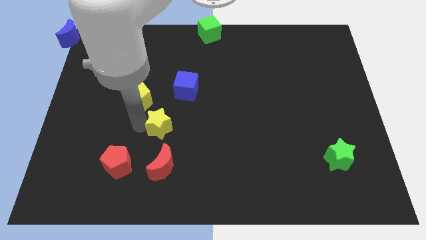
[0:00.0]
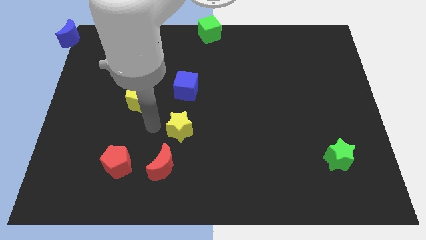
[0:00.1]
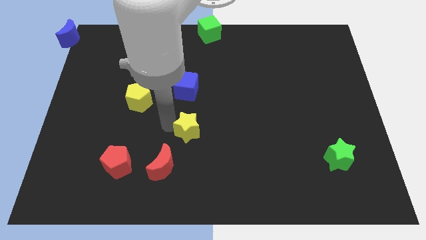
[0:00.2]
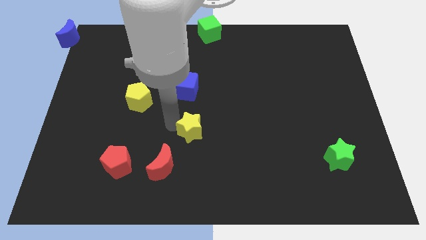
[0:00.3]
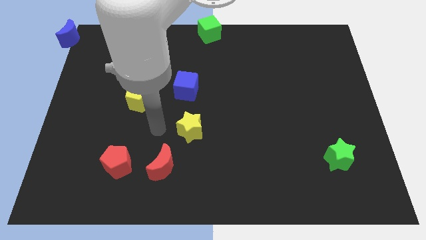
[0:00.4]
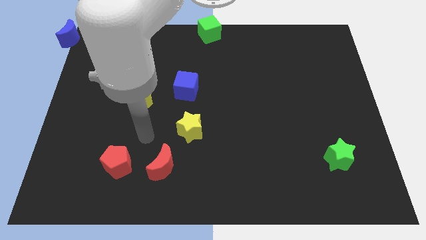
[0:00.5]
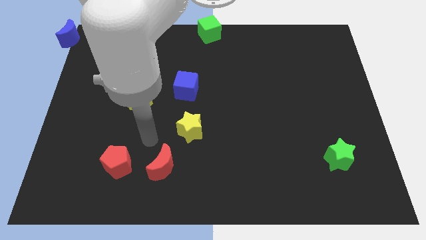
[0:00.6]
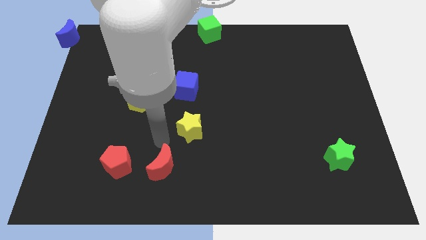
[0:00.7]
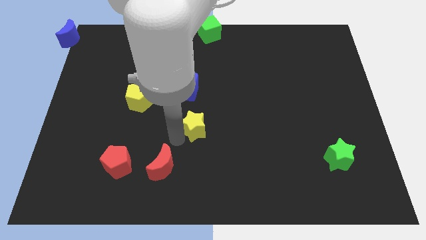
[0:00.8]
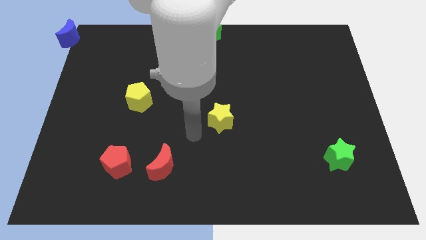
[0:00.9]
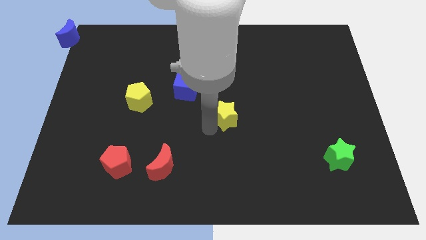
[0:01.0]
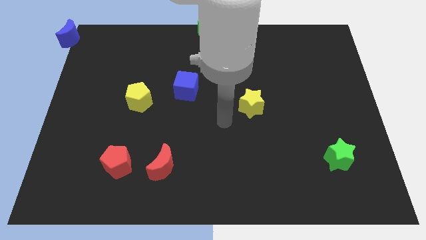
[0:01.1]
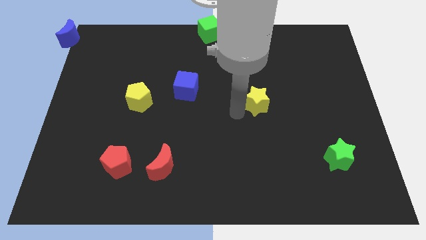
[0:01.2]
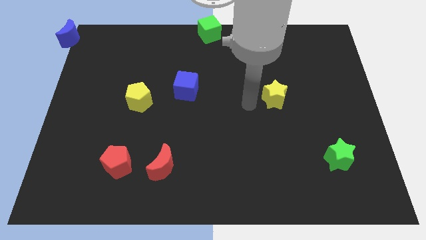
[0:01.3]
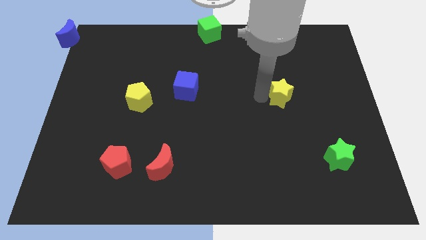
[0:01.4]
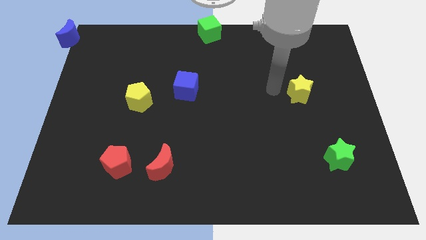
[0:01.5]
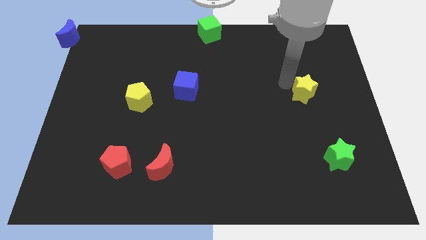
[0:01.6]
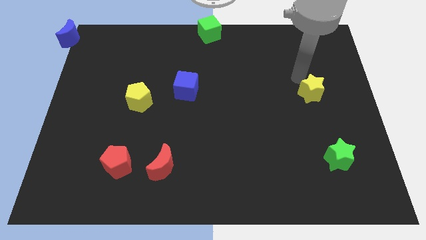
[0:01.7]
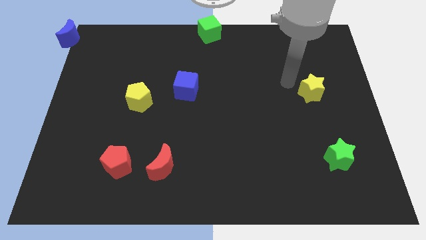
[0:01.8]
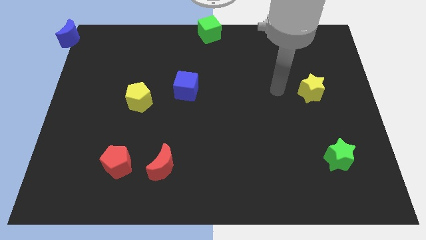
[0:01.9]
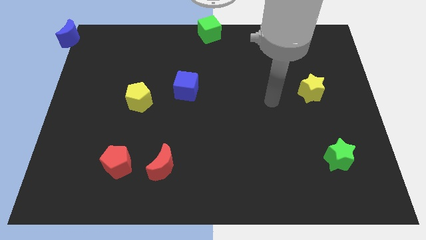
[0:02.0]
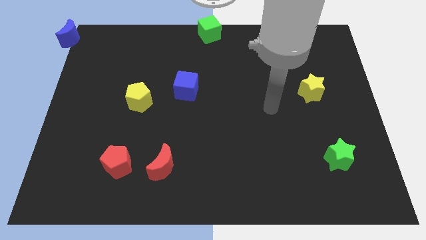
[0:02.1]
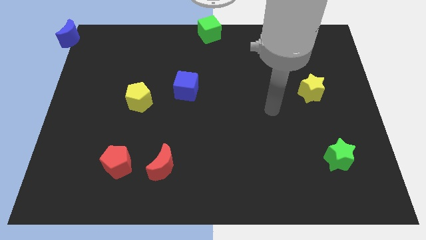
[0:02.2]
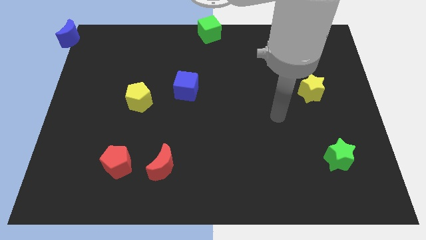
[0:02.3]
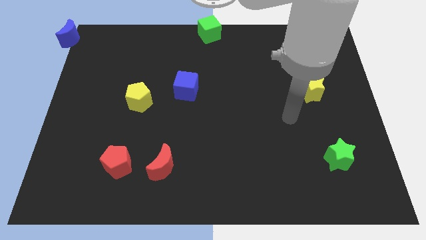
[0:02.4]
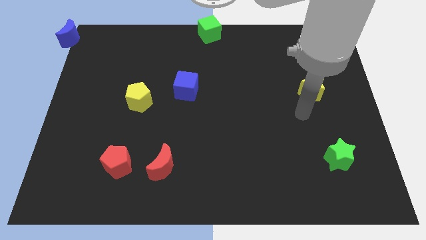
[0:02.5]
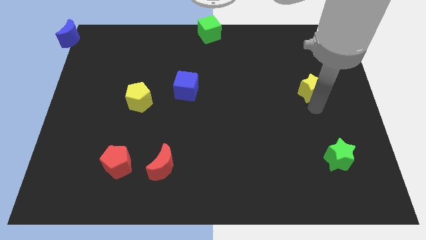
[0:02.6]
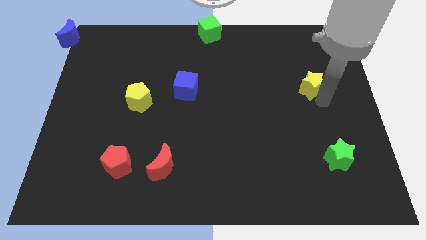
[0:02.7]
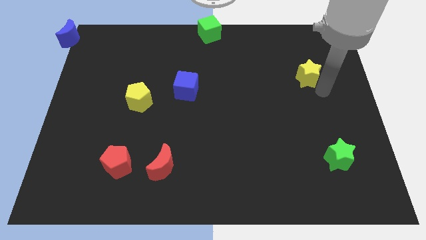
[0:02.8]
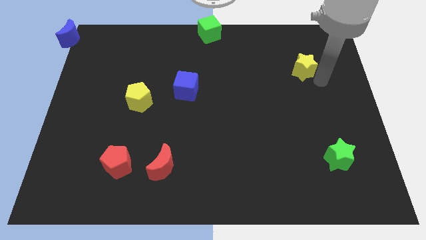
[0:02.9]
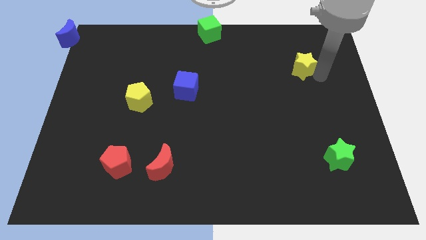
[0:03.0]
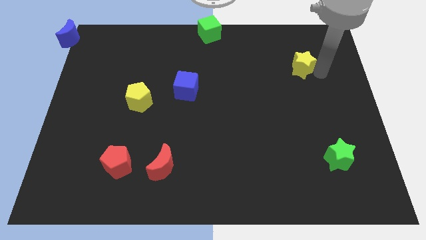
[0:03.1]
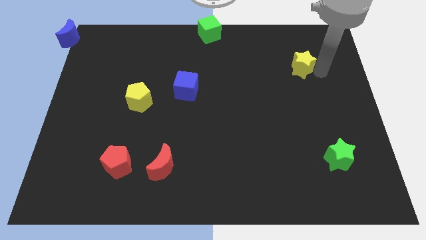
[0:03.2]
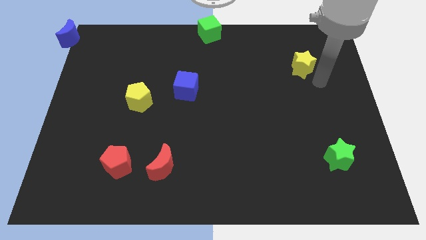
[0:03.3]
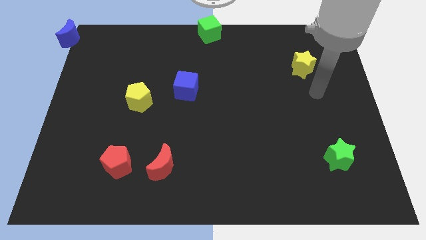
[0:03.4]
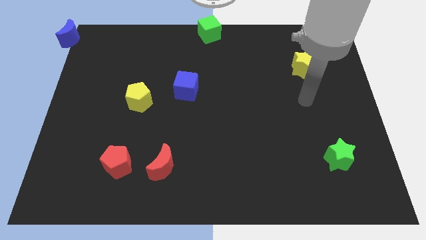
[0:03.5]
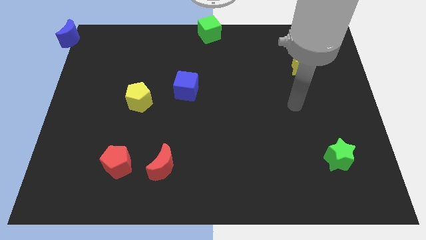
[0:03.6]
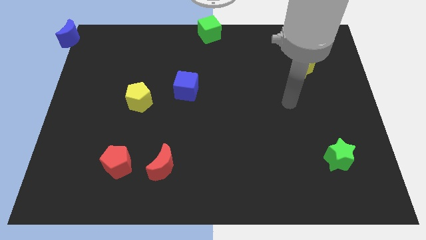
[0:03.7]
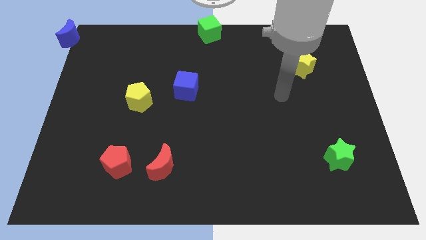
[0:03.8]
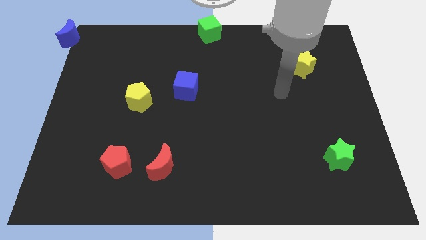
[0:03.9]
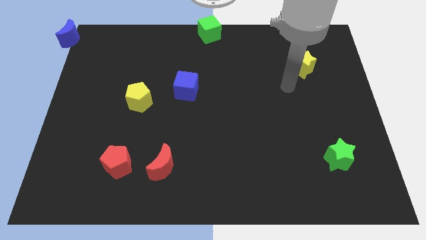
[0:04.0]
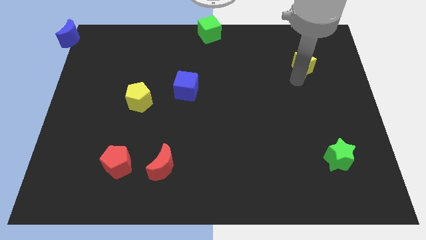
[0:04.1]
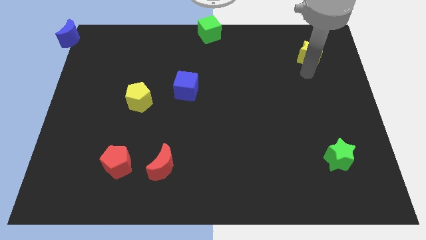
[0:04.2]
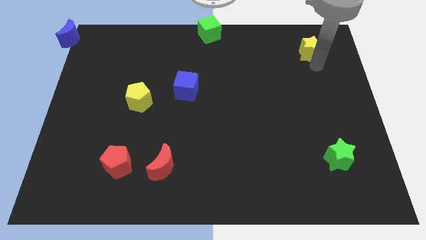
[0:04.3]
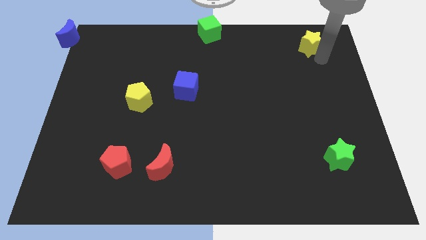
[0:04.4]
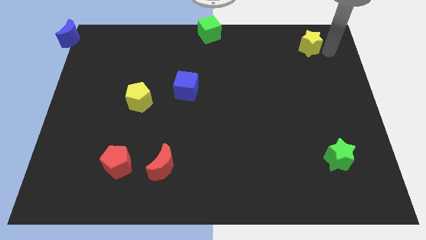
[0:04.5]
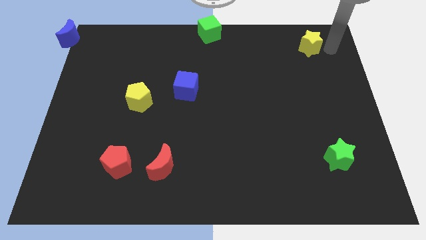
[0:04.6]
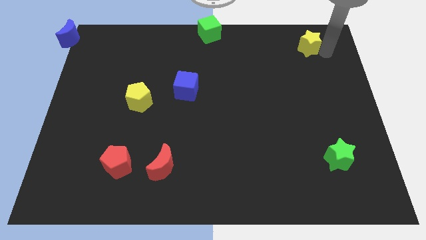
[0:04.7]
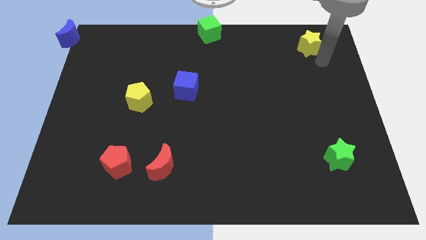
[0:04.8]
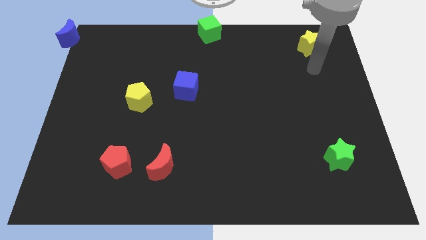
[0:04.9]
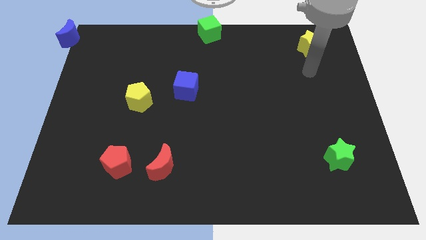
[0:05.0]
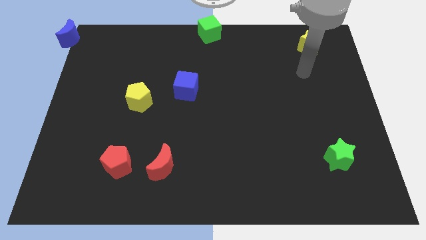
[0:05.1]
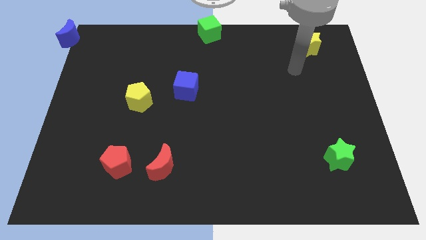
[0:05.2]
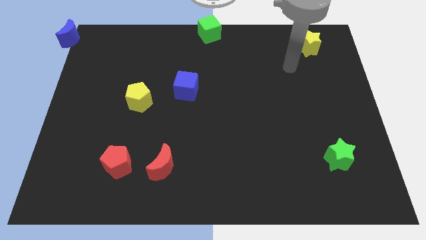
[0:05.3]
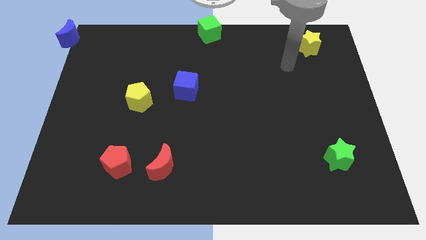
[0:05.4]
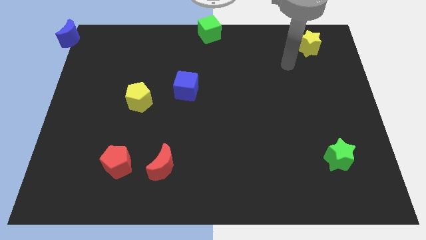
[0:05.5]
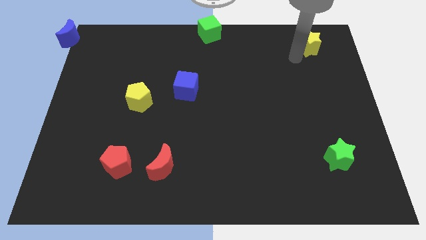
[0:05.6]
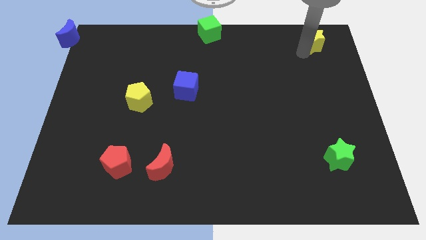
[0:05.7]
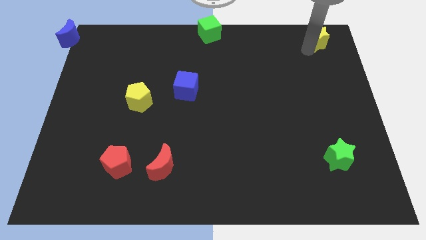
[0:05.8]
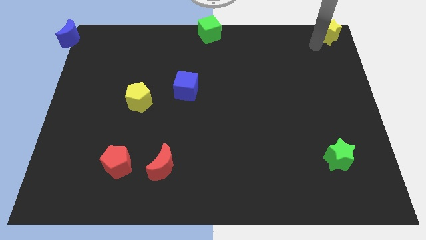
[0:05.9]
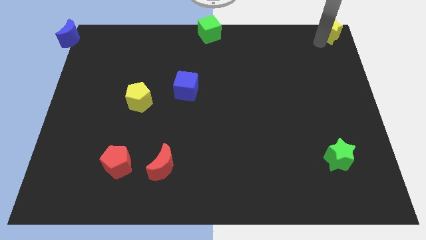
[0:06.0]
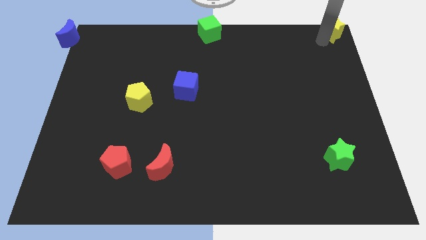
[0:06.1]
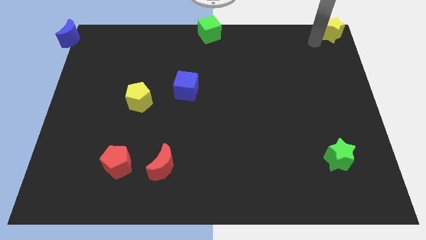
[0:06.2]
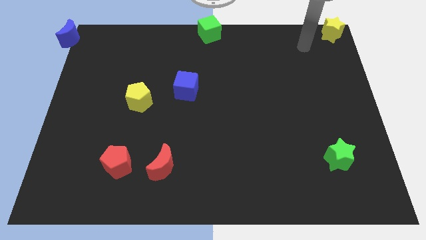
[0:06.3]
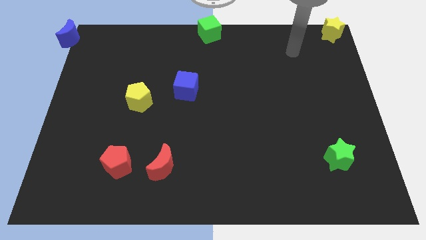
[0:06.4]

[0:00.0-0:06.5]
place yellow star to the top right corner of the board

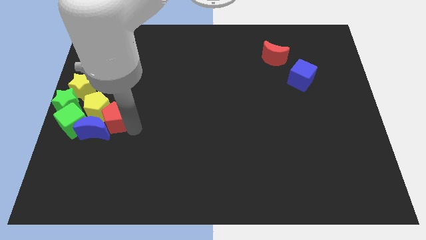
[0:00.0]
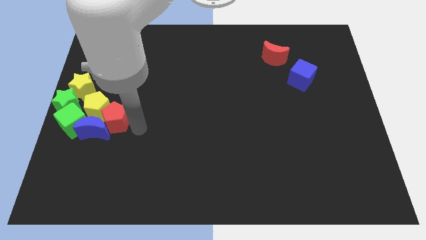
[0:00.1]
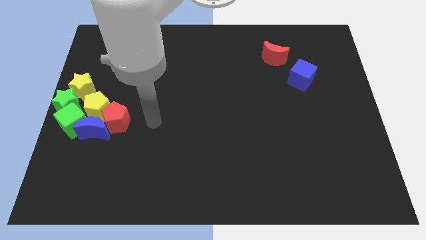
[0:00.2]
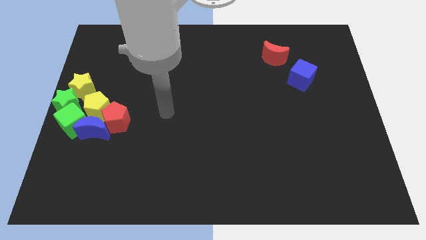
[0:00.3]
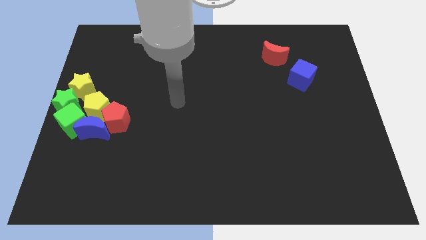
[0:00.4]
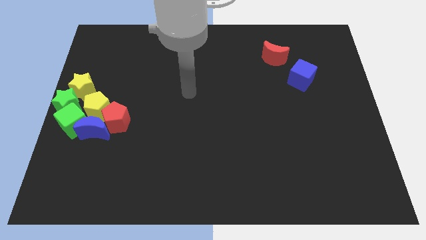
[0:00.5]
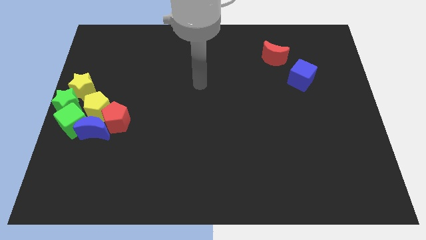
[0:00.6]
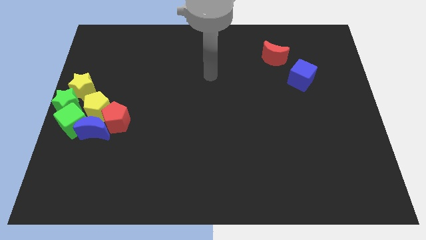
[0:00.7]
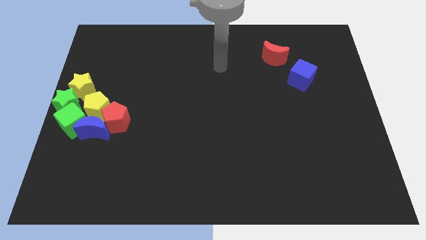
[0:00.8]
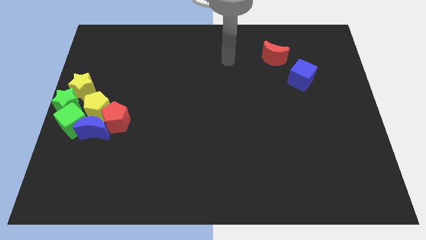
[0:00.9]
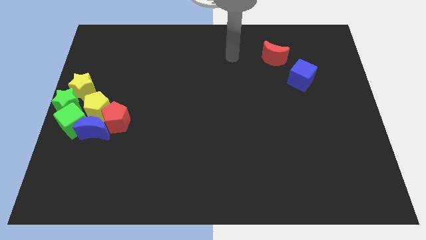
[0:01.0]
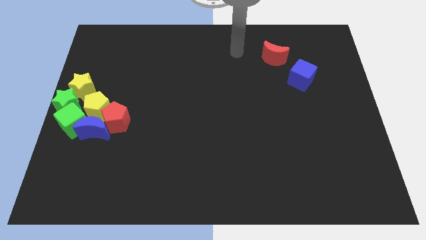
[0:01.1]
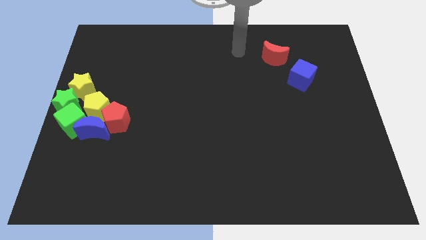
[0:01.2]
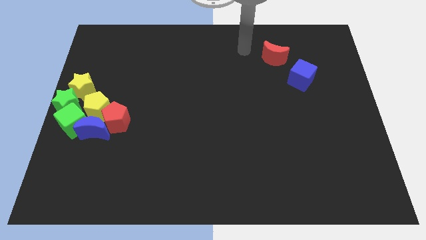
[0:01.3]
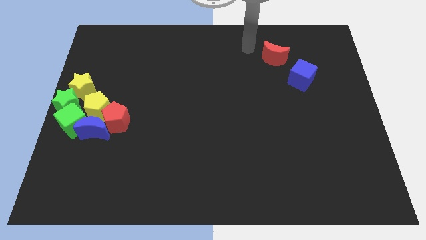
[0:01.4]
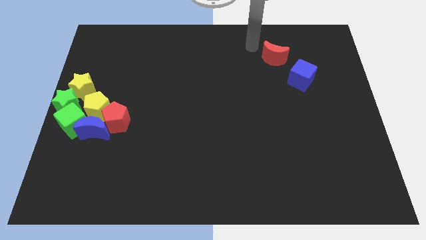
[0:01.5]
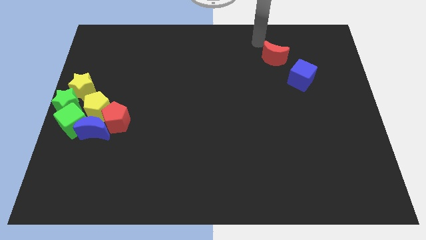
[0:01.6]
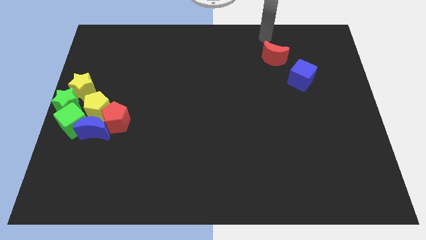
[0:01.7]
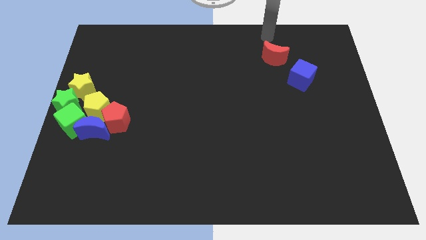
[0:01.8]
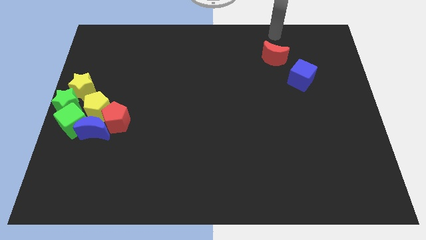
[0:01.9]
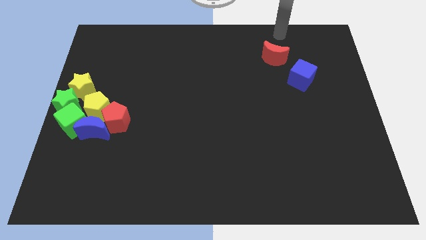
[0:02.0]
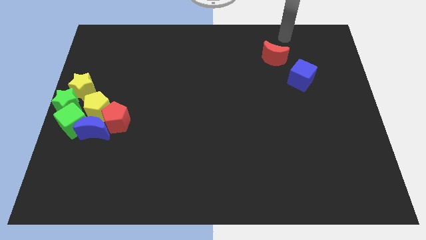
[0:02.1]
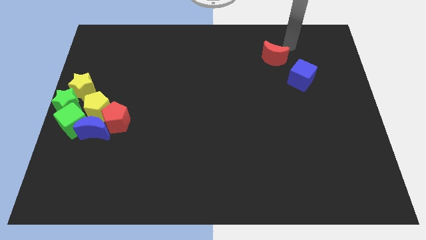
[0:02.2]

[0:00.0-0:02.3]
move the arm right to the red moon

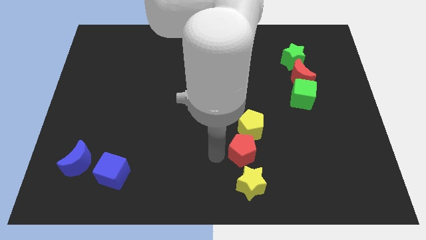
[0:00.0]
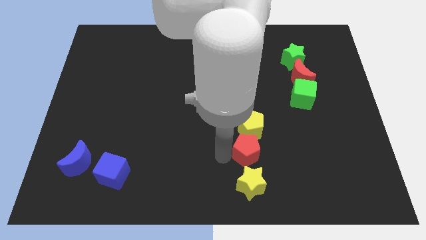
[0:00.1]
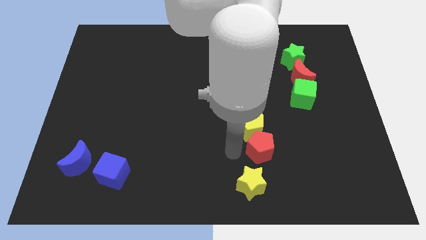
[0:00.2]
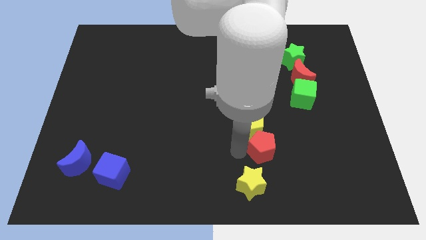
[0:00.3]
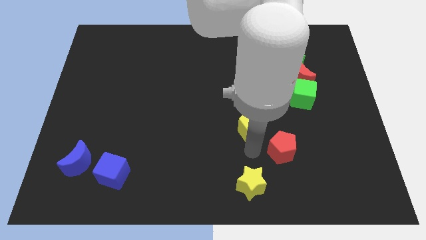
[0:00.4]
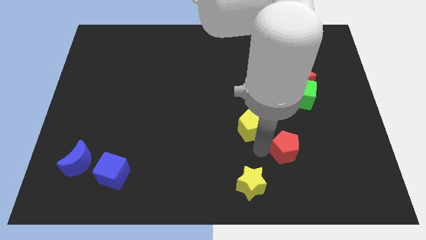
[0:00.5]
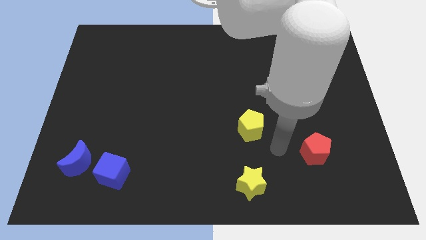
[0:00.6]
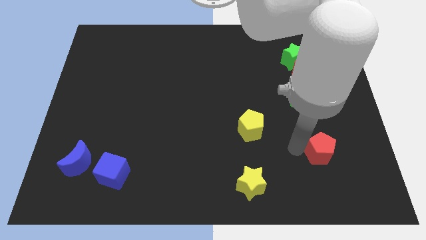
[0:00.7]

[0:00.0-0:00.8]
move the red pentagon to the bottom center right of the board
